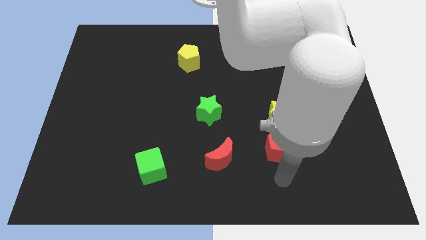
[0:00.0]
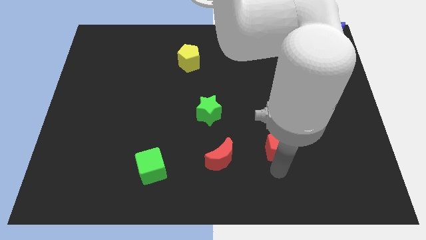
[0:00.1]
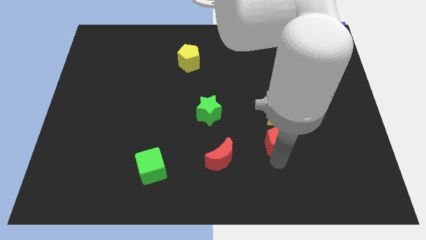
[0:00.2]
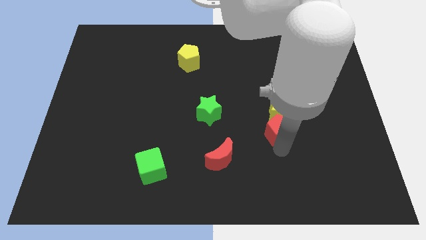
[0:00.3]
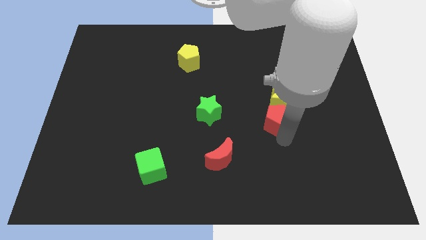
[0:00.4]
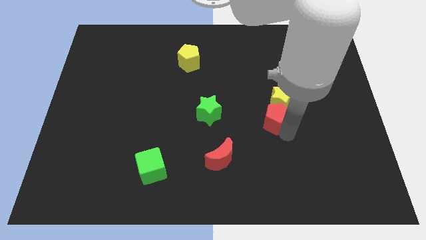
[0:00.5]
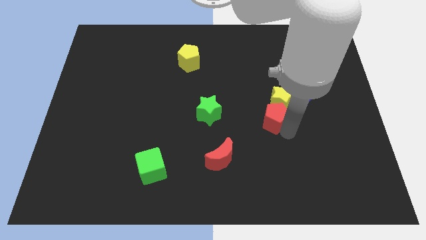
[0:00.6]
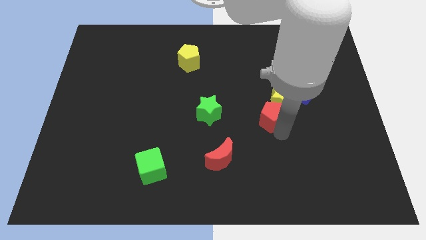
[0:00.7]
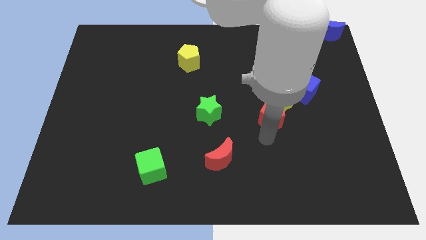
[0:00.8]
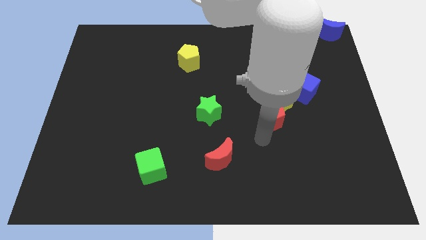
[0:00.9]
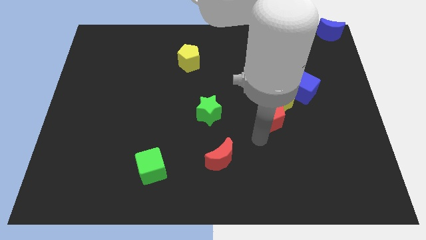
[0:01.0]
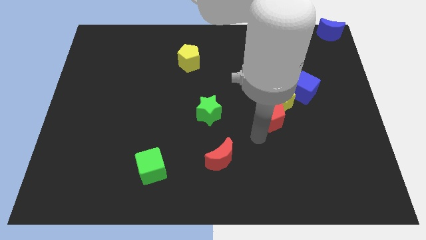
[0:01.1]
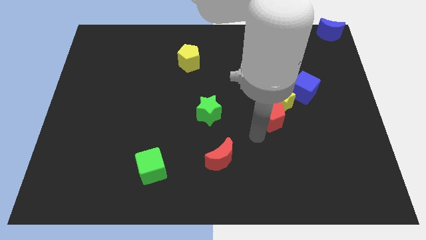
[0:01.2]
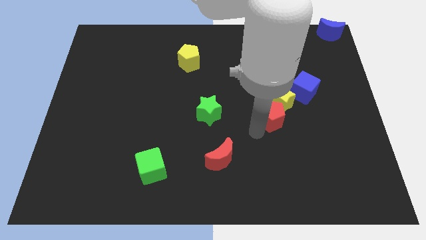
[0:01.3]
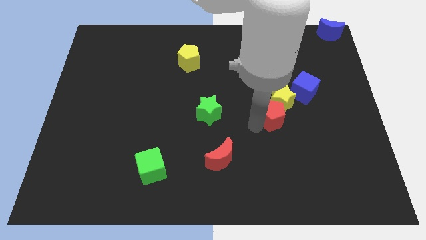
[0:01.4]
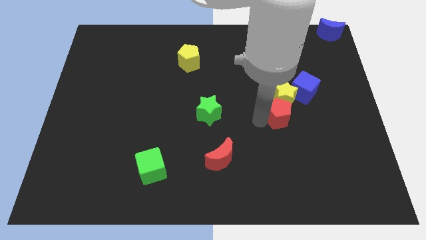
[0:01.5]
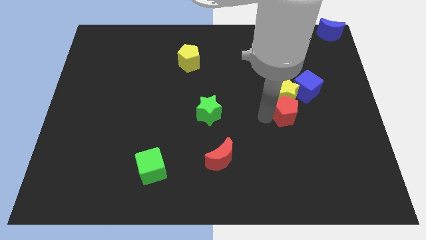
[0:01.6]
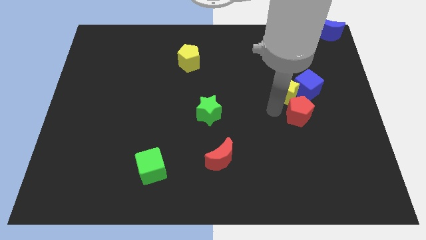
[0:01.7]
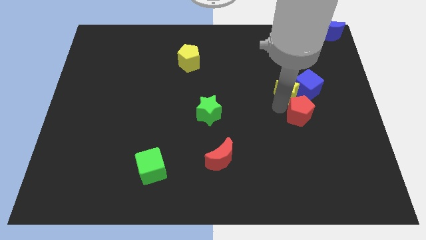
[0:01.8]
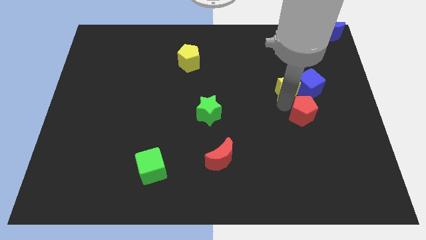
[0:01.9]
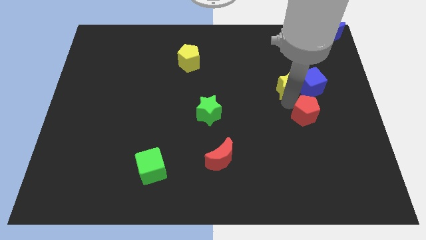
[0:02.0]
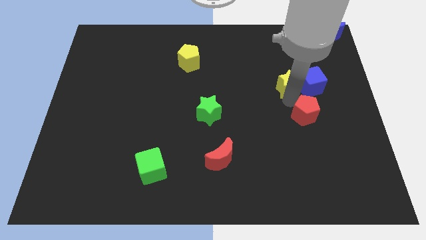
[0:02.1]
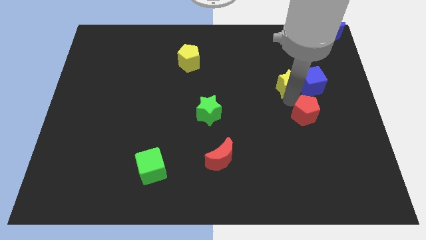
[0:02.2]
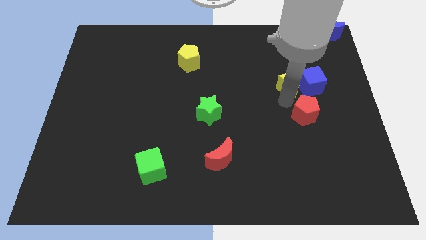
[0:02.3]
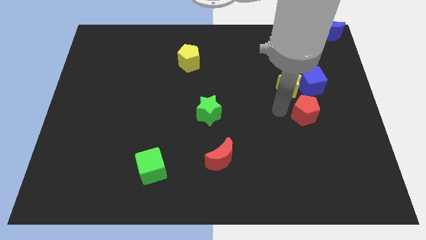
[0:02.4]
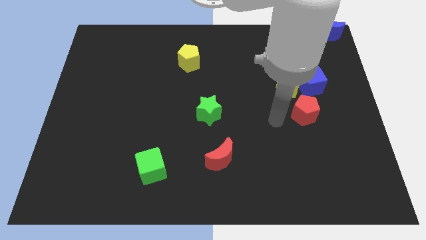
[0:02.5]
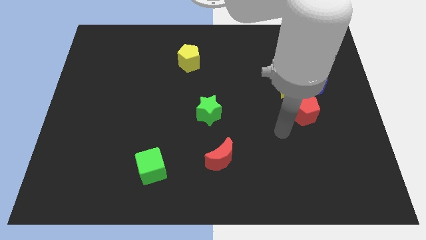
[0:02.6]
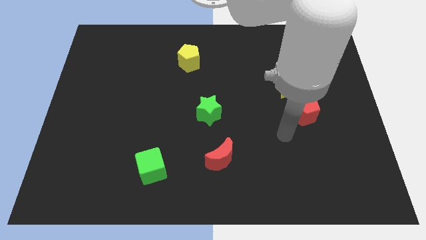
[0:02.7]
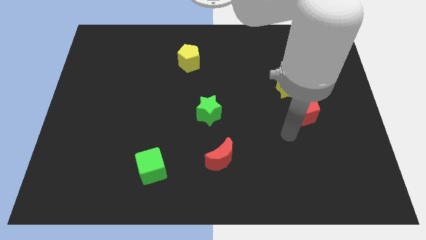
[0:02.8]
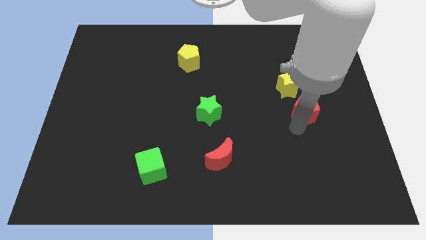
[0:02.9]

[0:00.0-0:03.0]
push the red pentagon into the yellow star and the blue cube

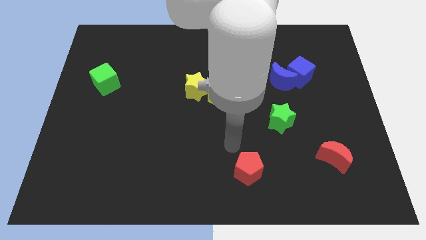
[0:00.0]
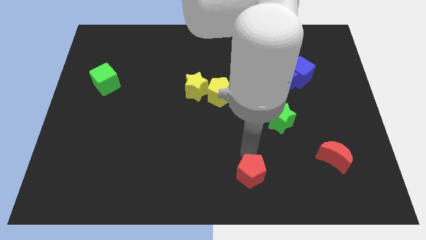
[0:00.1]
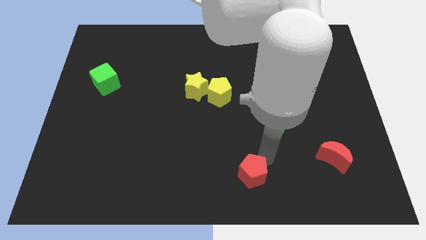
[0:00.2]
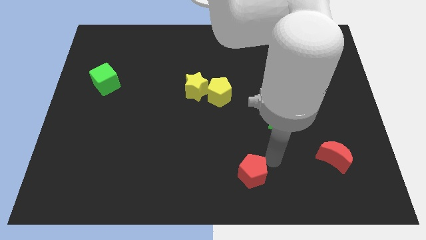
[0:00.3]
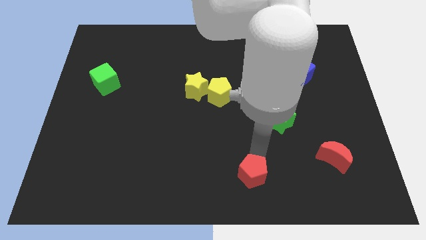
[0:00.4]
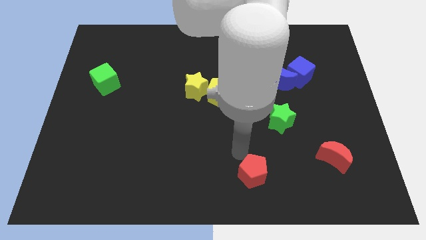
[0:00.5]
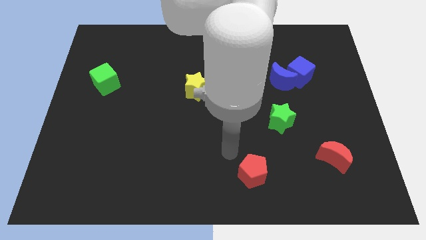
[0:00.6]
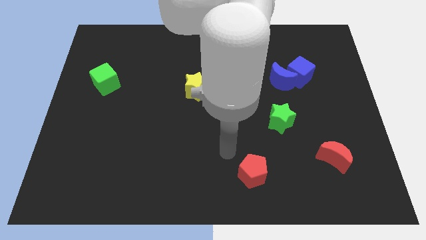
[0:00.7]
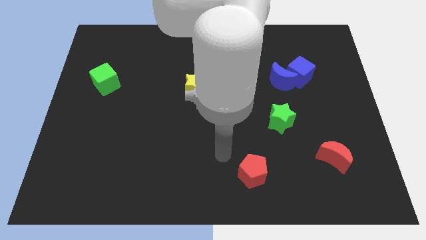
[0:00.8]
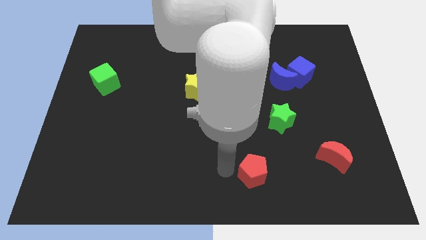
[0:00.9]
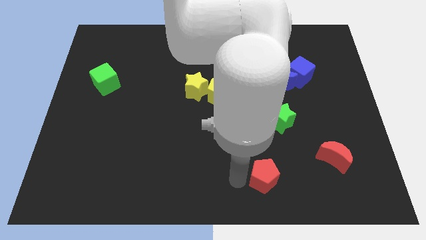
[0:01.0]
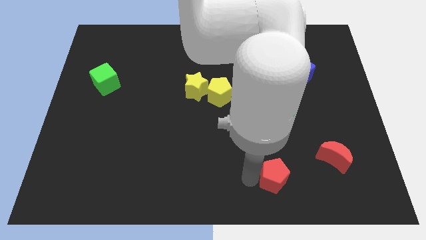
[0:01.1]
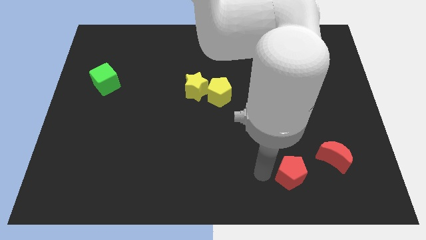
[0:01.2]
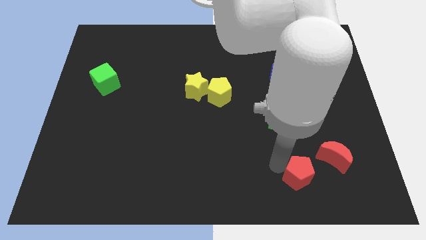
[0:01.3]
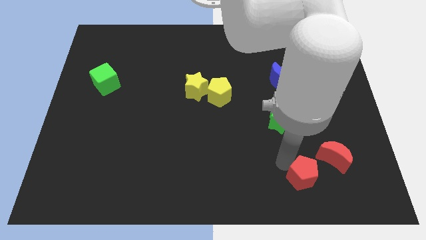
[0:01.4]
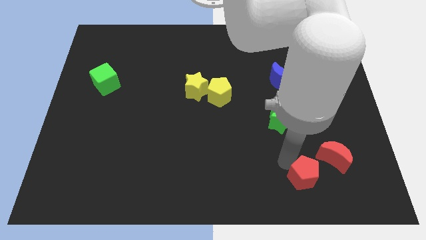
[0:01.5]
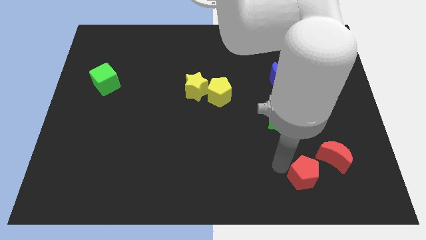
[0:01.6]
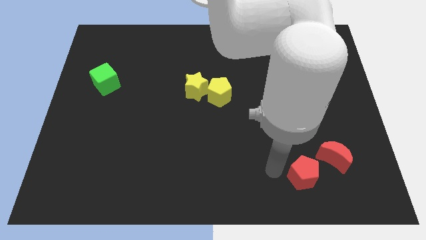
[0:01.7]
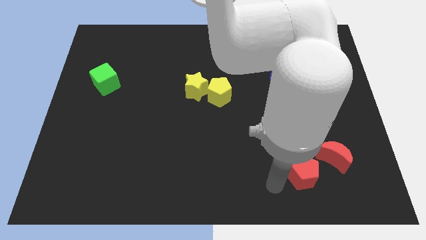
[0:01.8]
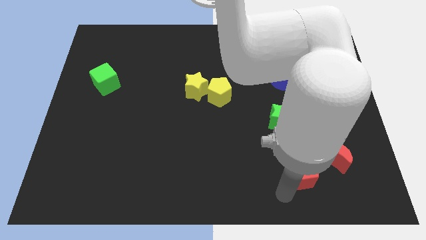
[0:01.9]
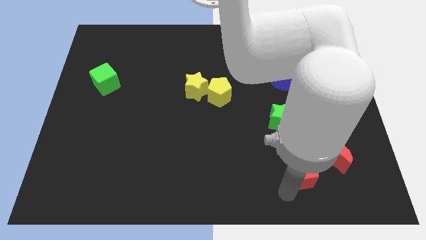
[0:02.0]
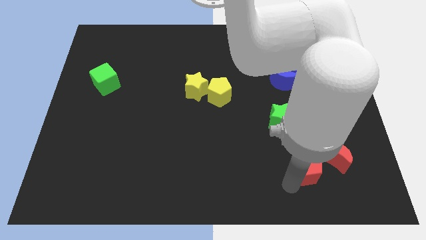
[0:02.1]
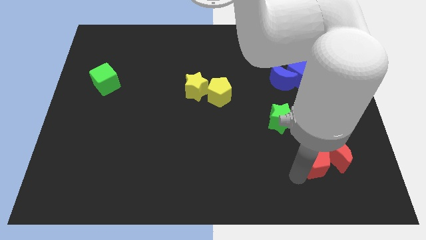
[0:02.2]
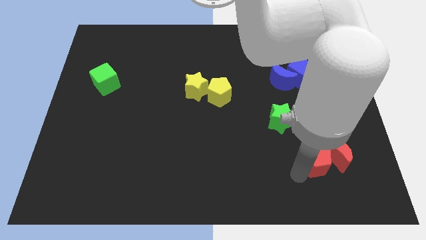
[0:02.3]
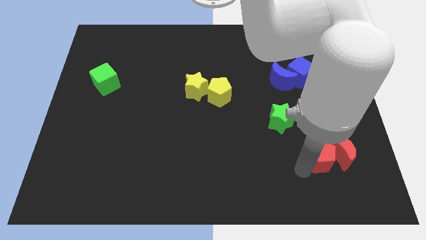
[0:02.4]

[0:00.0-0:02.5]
push the red pentagon into the red moon

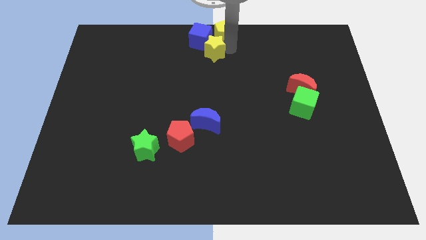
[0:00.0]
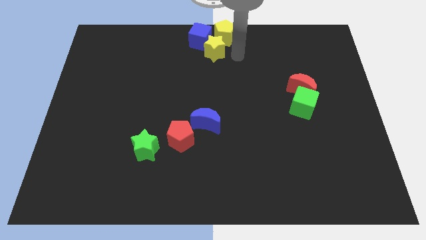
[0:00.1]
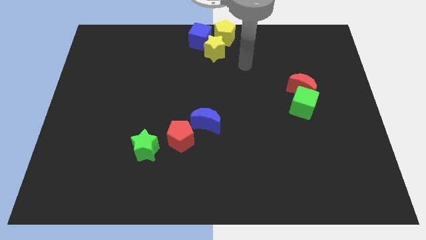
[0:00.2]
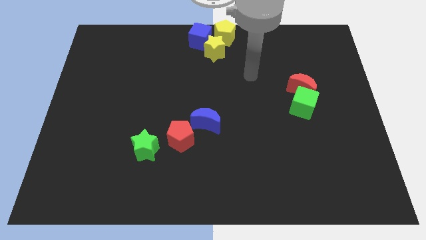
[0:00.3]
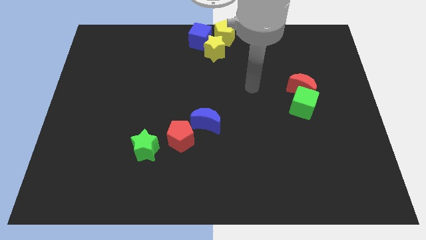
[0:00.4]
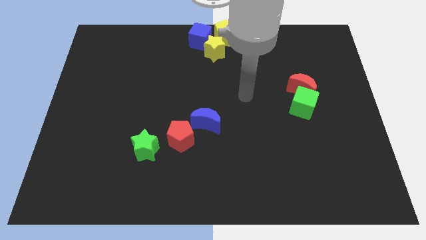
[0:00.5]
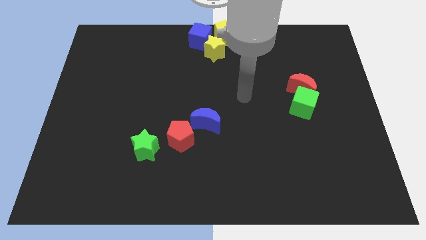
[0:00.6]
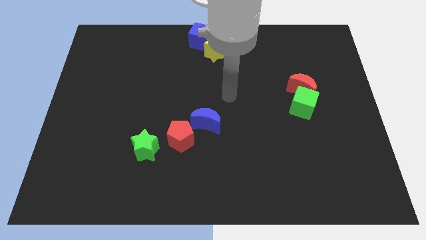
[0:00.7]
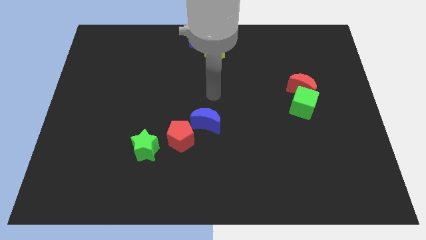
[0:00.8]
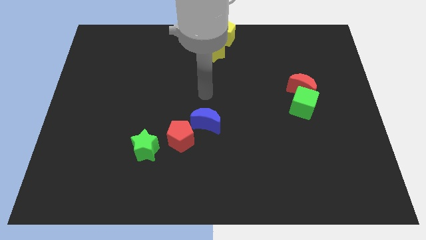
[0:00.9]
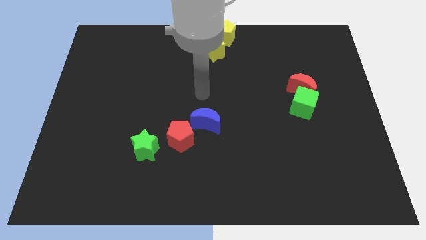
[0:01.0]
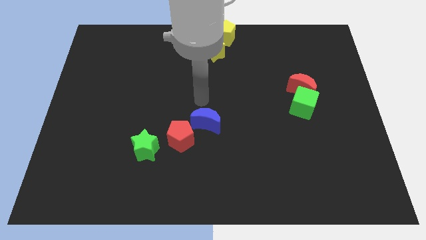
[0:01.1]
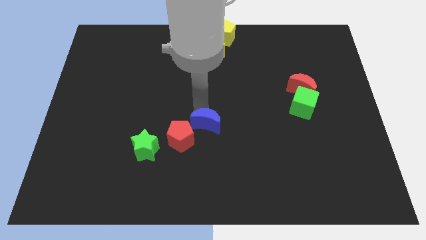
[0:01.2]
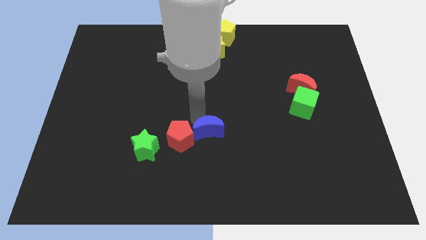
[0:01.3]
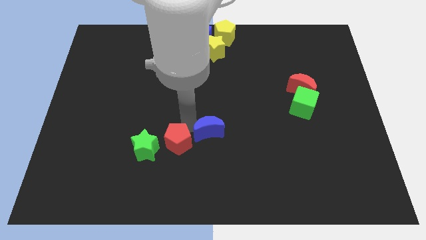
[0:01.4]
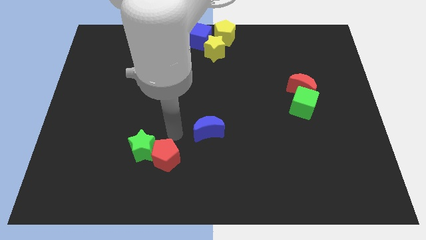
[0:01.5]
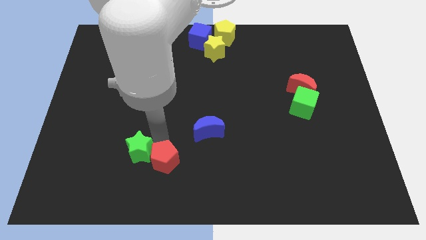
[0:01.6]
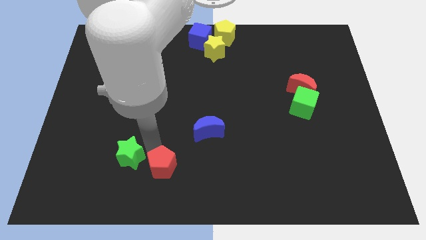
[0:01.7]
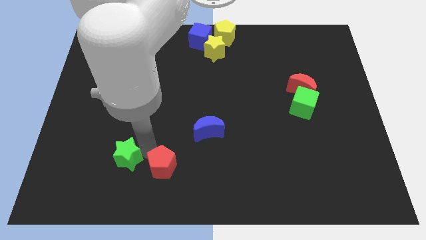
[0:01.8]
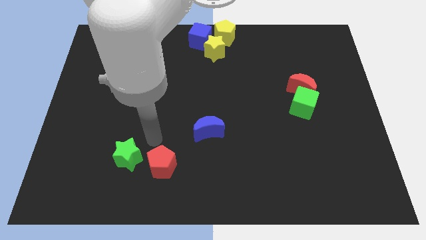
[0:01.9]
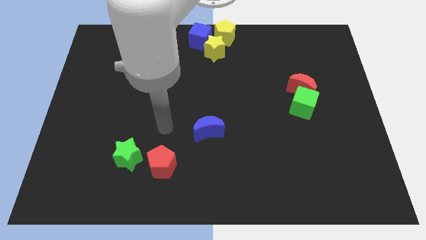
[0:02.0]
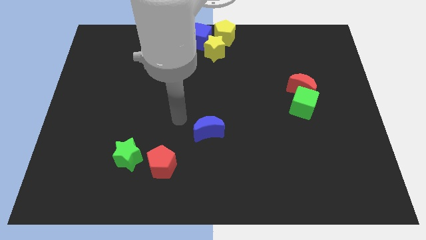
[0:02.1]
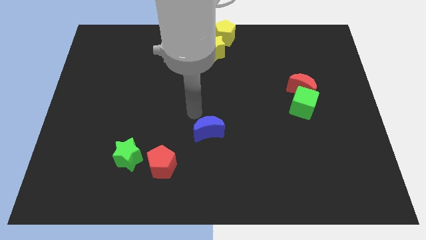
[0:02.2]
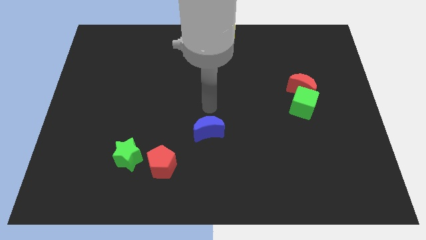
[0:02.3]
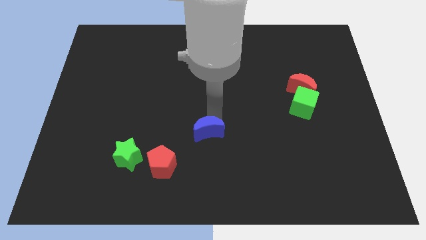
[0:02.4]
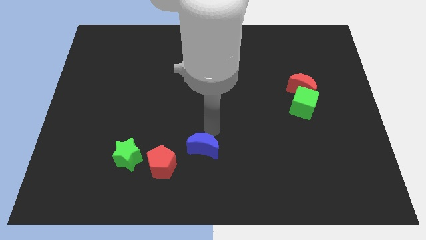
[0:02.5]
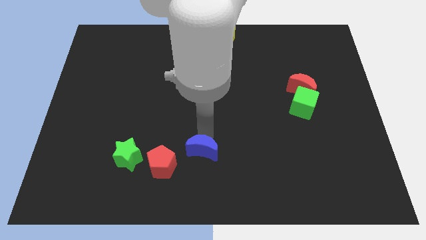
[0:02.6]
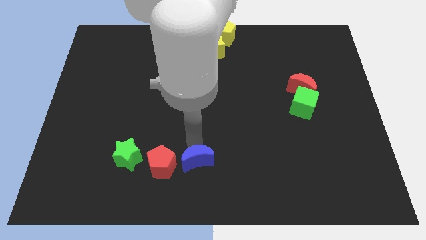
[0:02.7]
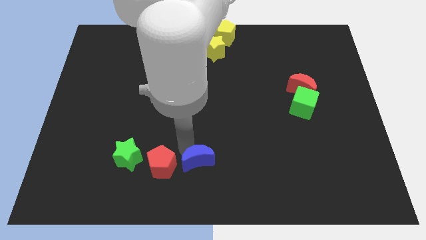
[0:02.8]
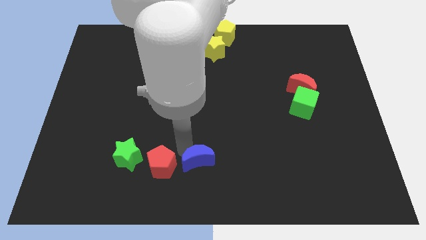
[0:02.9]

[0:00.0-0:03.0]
move the blue crescent to the right side of the red pentagon

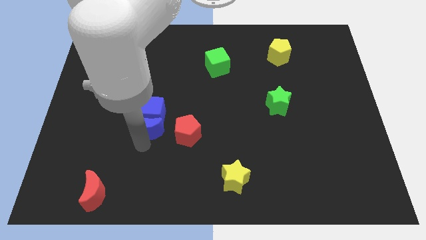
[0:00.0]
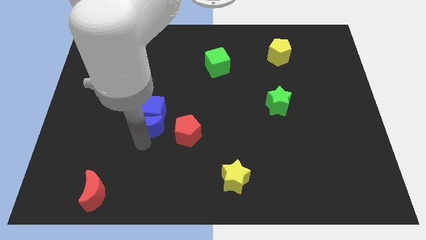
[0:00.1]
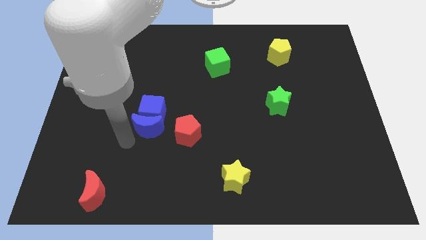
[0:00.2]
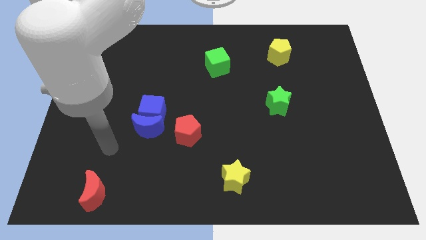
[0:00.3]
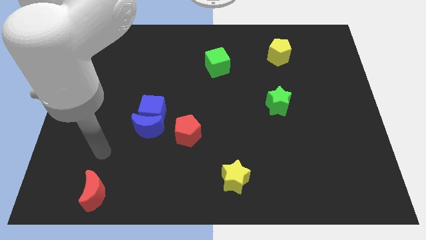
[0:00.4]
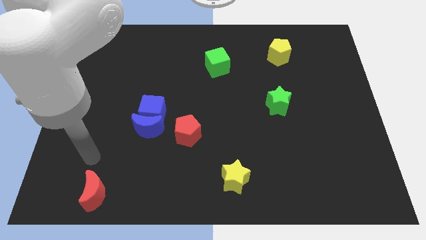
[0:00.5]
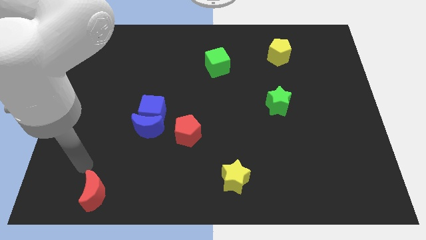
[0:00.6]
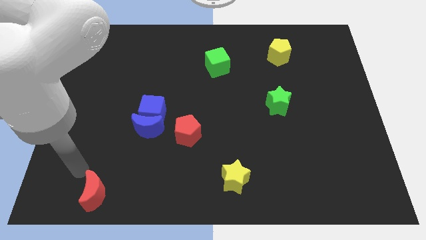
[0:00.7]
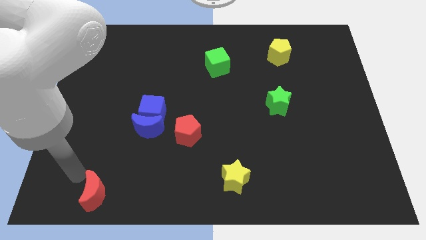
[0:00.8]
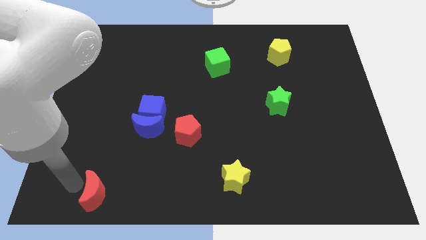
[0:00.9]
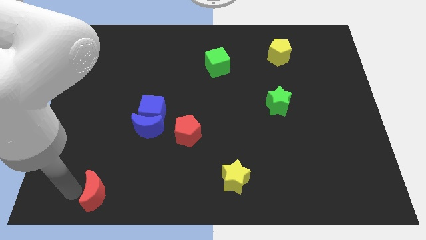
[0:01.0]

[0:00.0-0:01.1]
slide your hand to the left of red moon
